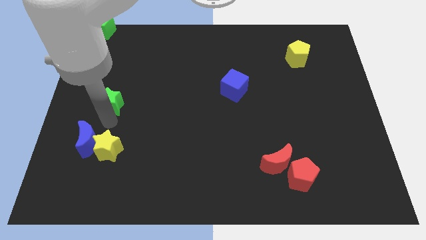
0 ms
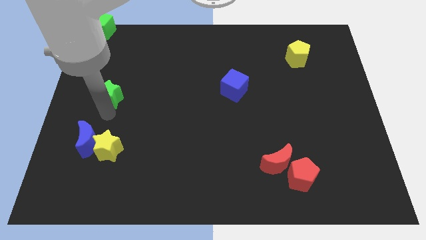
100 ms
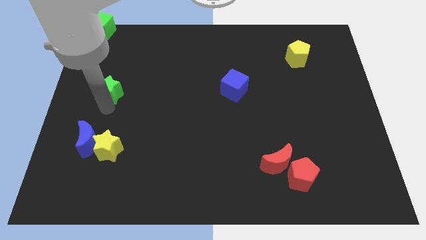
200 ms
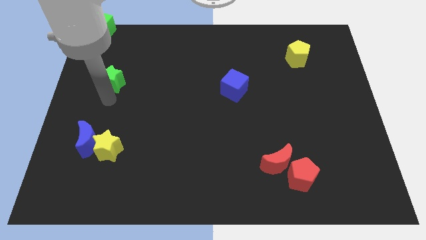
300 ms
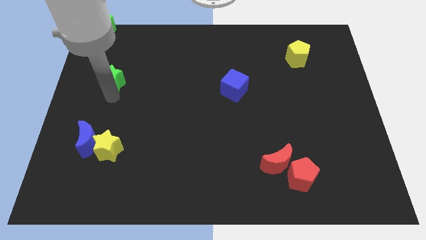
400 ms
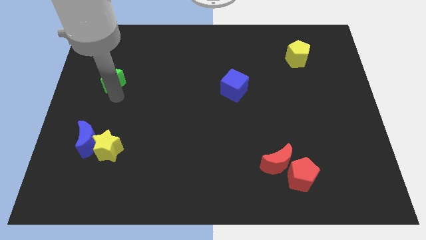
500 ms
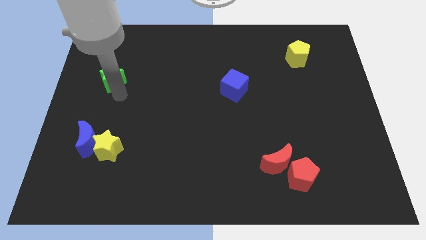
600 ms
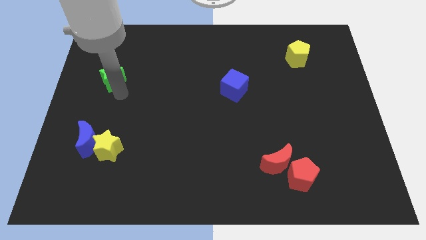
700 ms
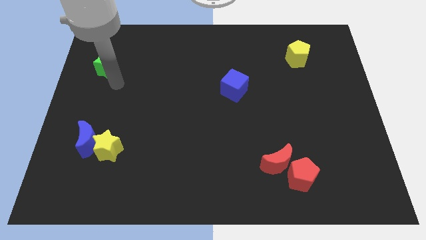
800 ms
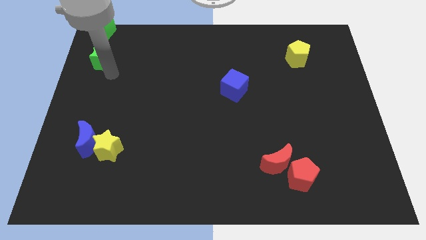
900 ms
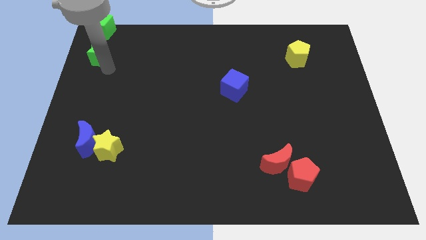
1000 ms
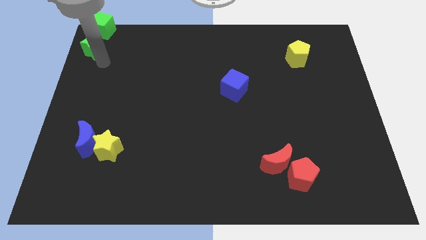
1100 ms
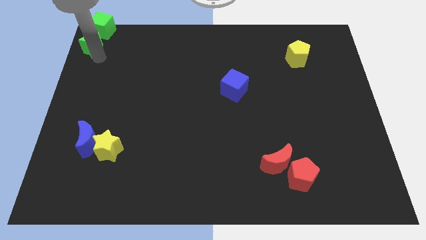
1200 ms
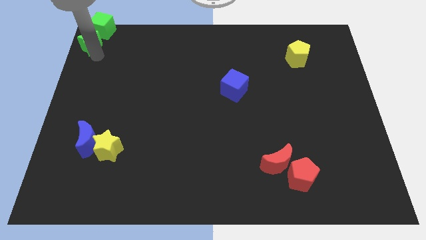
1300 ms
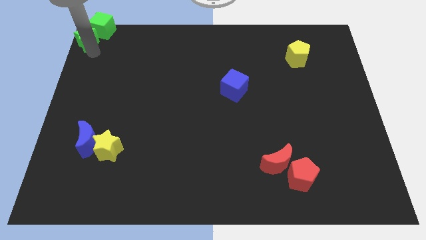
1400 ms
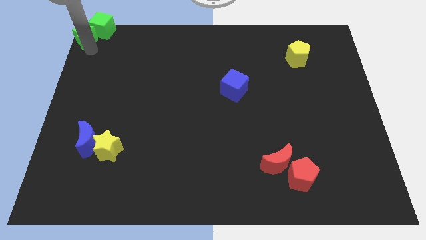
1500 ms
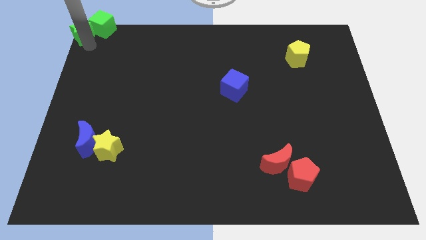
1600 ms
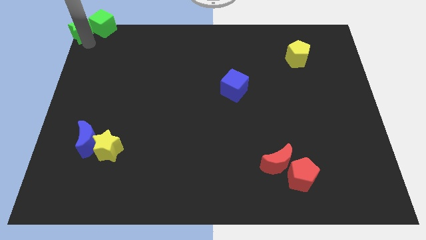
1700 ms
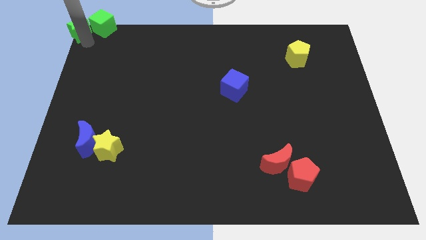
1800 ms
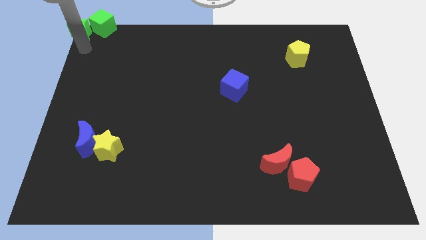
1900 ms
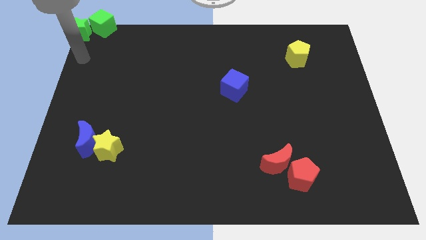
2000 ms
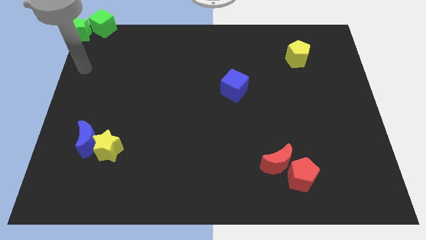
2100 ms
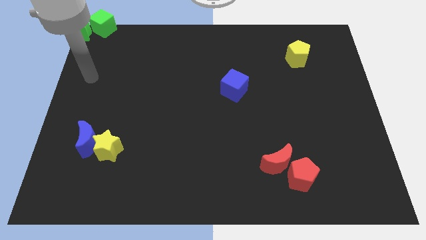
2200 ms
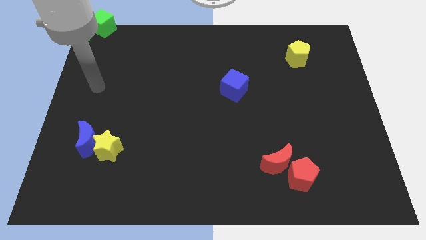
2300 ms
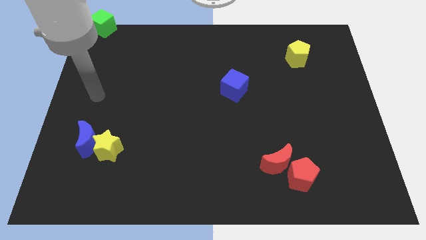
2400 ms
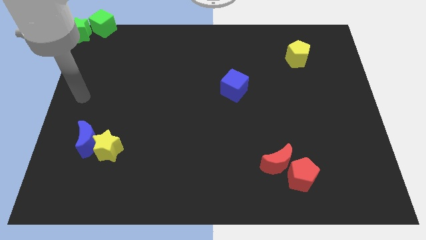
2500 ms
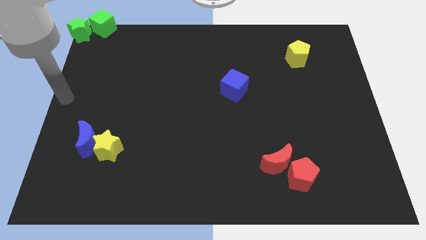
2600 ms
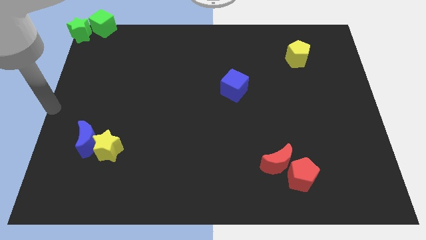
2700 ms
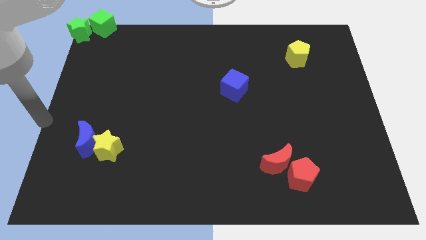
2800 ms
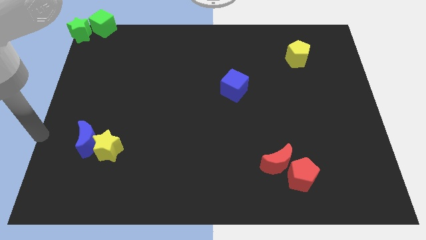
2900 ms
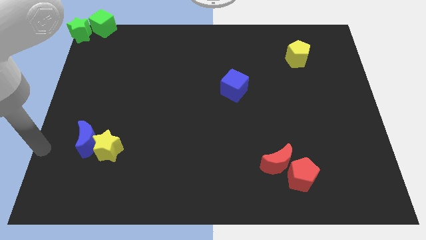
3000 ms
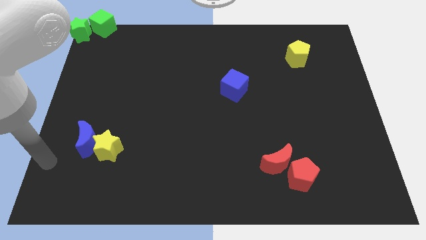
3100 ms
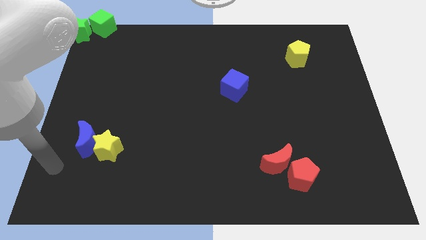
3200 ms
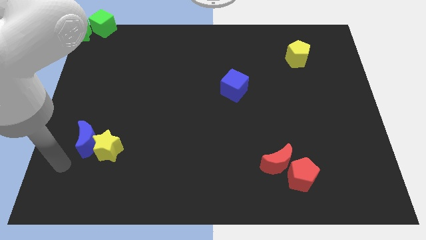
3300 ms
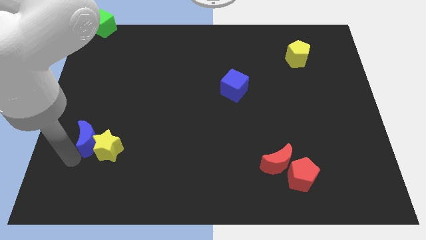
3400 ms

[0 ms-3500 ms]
push the green star into the green cube

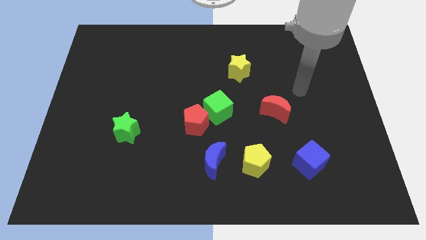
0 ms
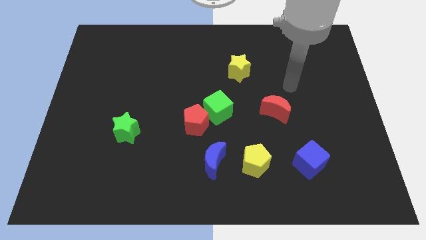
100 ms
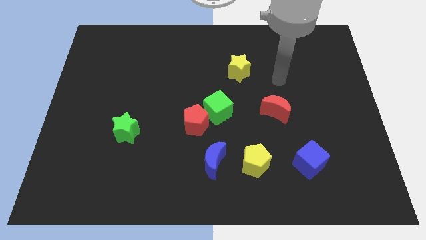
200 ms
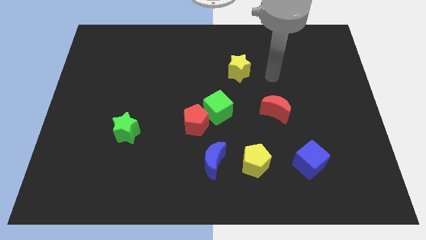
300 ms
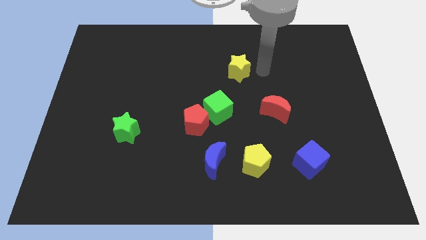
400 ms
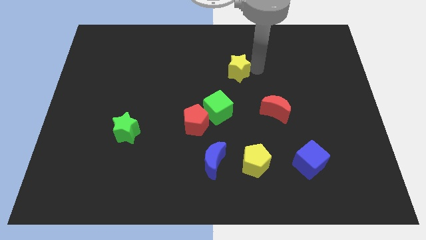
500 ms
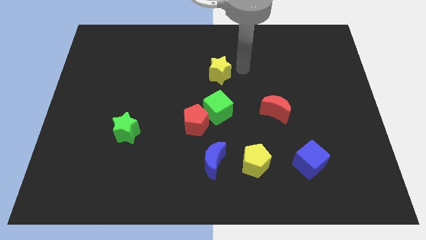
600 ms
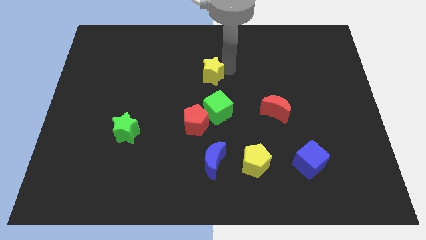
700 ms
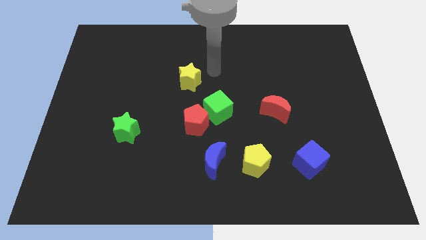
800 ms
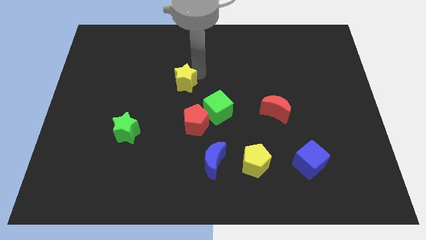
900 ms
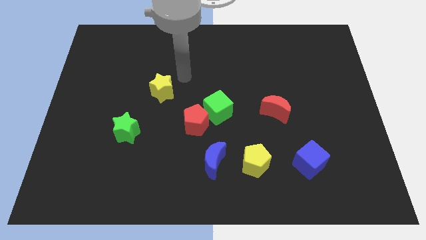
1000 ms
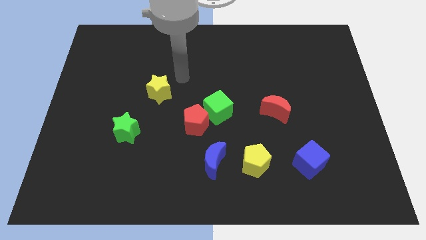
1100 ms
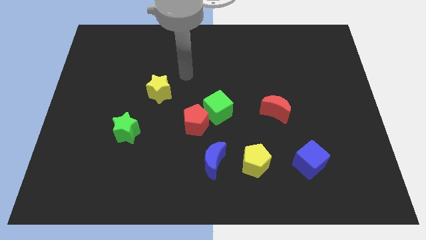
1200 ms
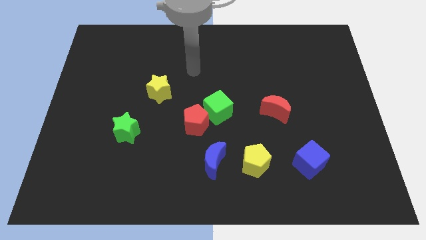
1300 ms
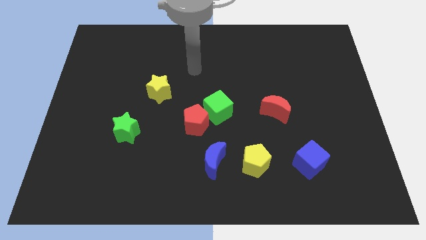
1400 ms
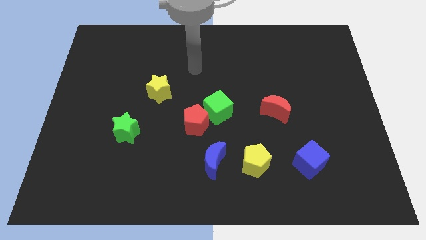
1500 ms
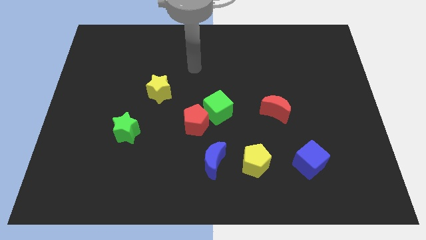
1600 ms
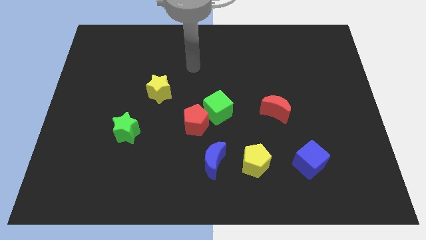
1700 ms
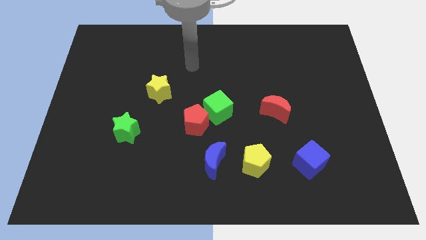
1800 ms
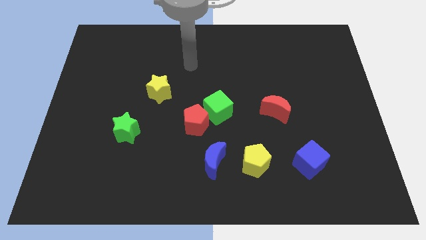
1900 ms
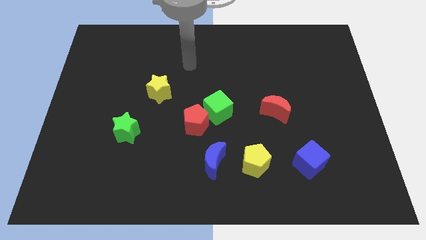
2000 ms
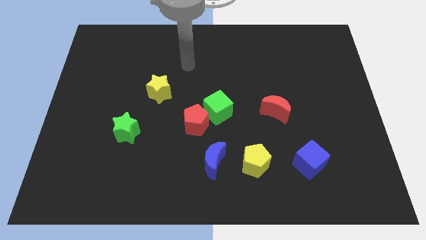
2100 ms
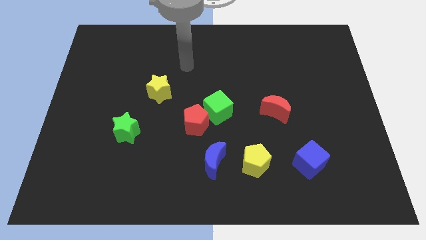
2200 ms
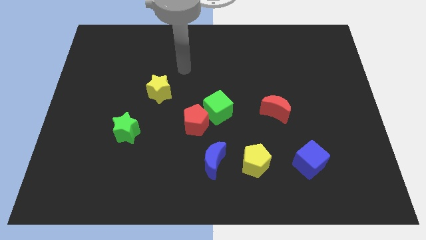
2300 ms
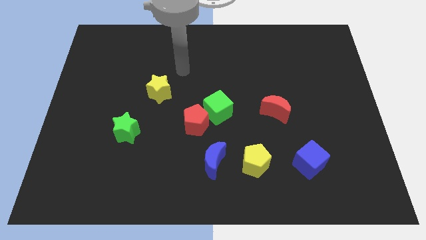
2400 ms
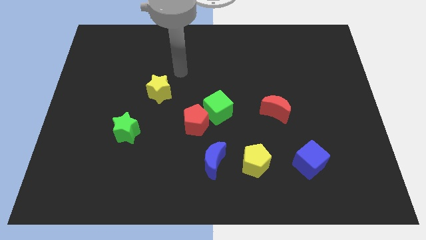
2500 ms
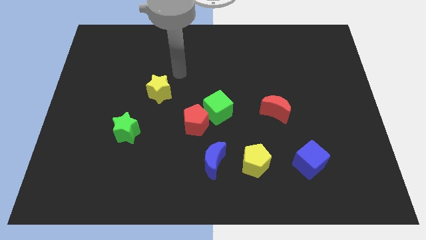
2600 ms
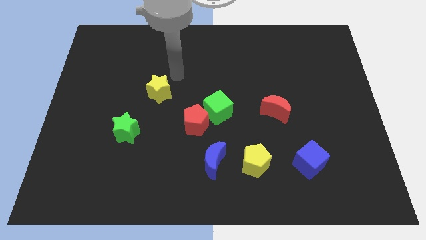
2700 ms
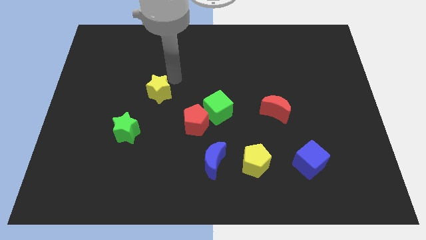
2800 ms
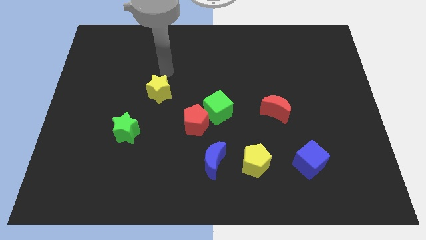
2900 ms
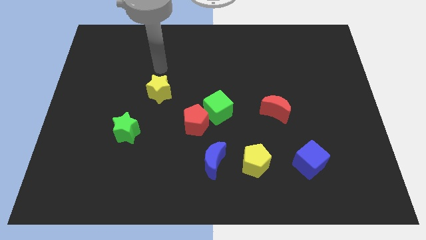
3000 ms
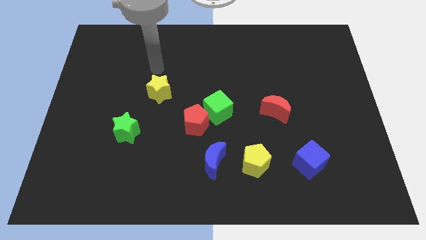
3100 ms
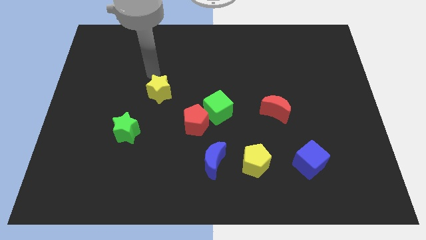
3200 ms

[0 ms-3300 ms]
move the yellow star at the top right side of the green star

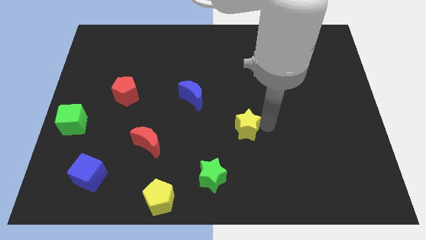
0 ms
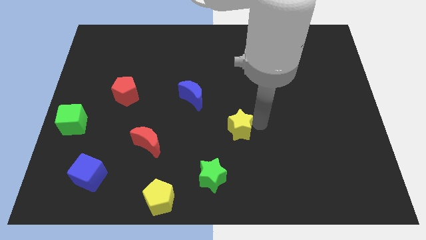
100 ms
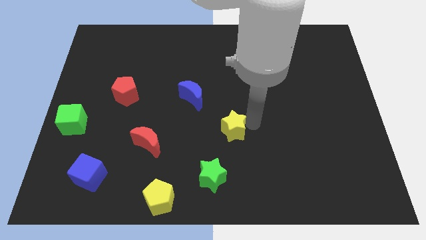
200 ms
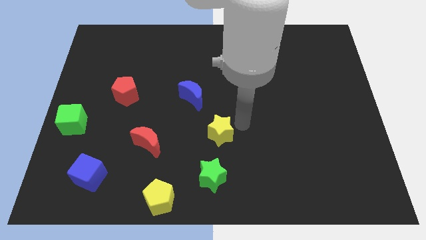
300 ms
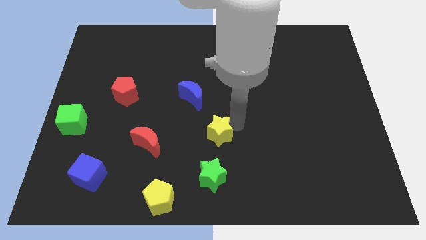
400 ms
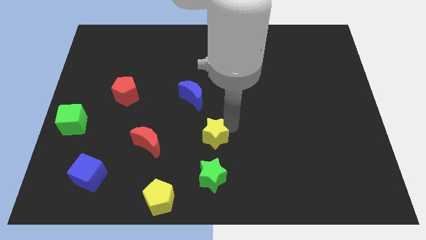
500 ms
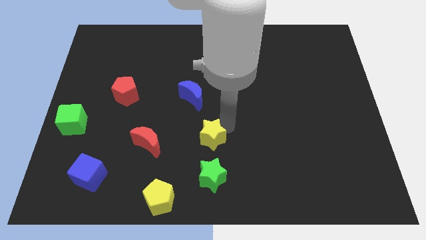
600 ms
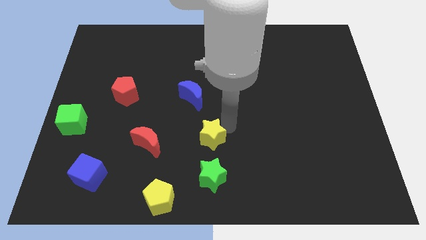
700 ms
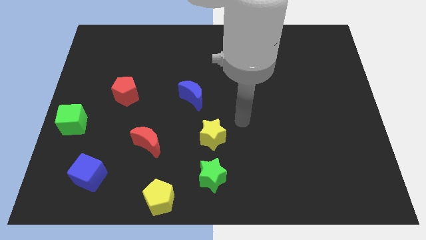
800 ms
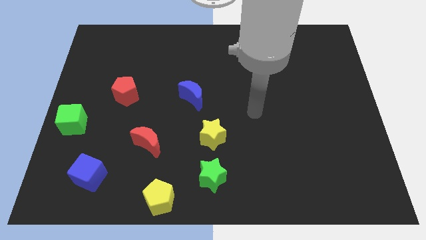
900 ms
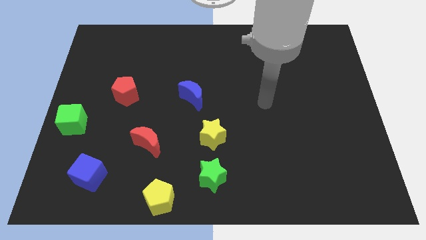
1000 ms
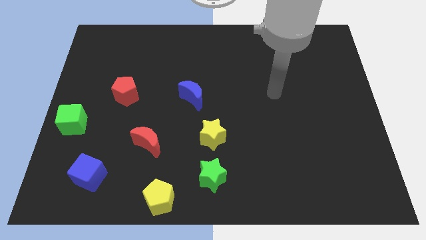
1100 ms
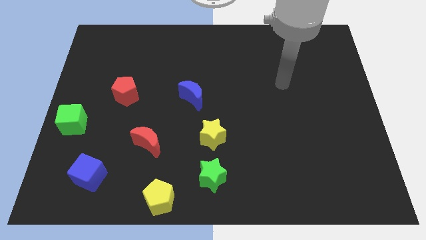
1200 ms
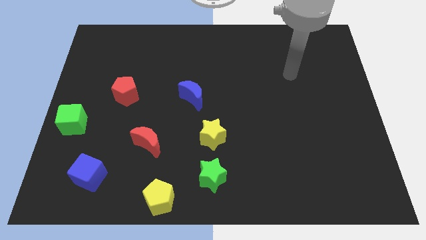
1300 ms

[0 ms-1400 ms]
push the yelloe star to the top of the green star

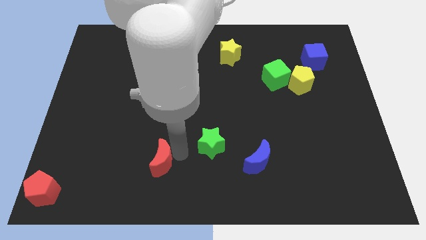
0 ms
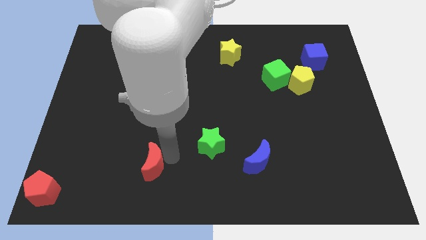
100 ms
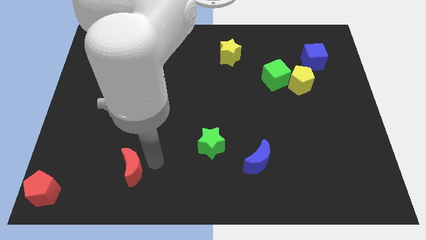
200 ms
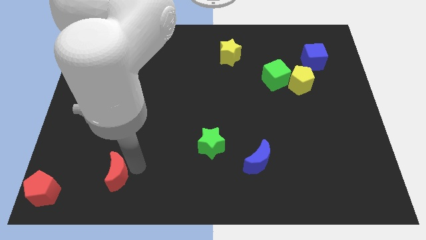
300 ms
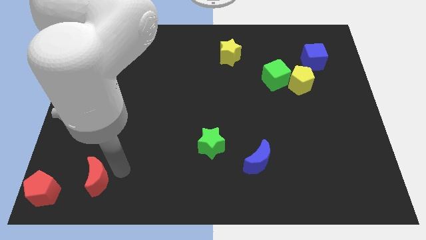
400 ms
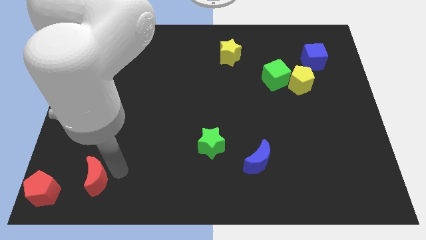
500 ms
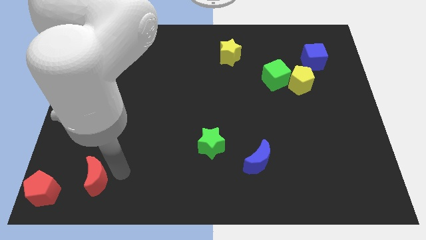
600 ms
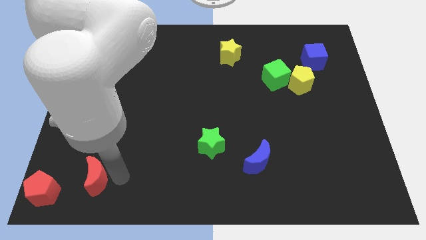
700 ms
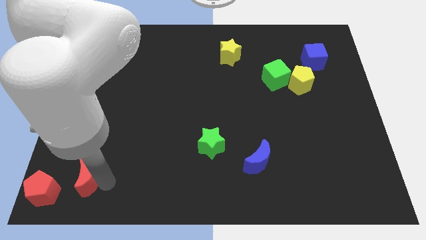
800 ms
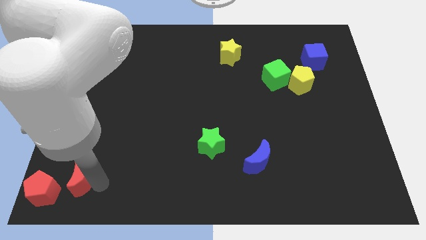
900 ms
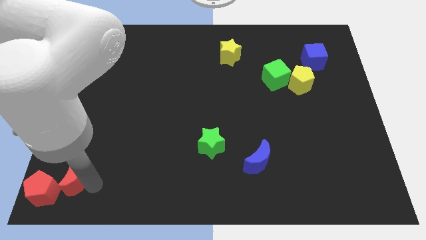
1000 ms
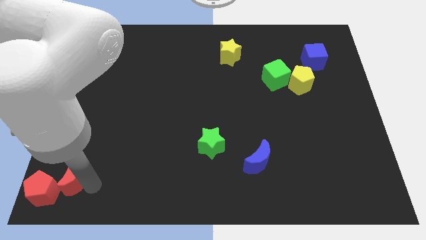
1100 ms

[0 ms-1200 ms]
move red crescent towards the red pentagon
